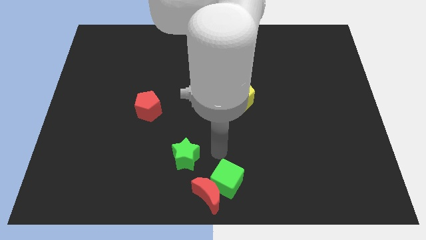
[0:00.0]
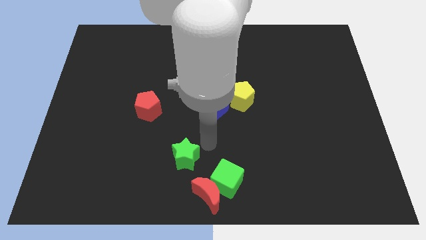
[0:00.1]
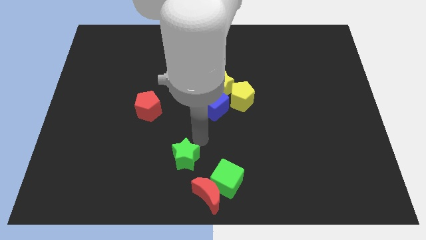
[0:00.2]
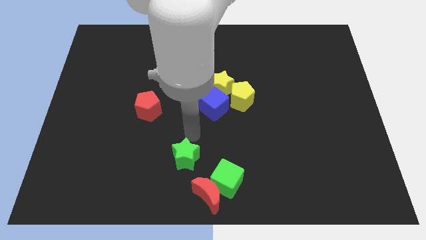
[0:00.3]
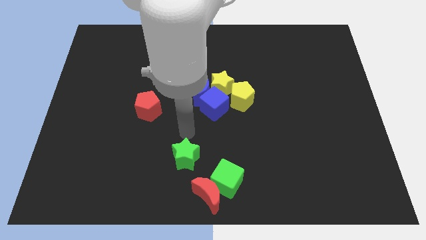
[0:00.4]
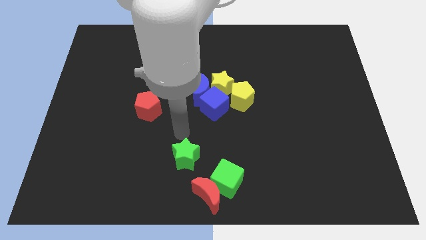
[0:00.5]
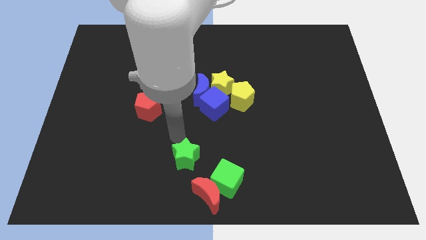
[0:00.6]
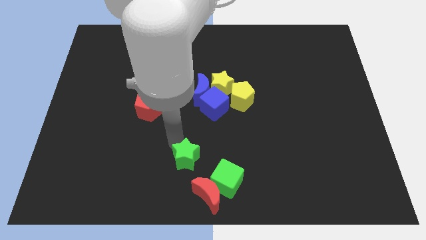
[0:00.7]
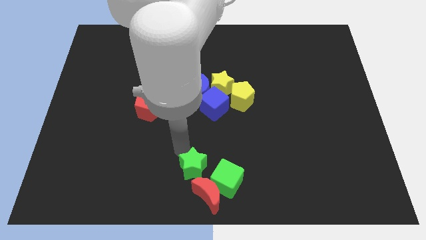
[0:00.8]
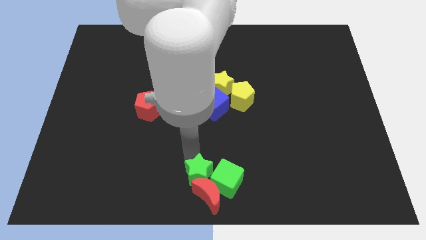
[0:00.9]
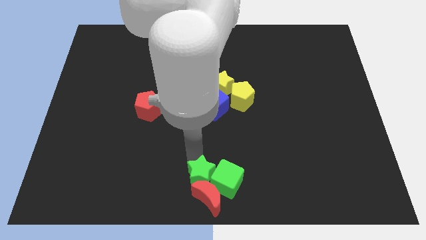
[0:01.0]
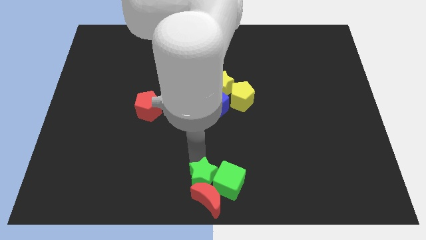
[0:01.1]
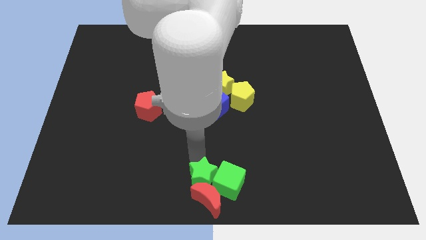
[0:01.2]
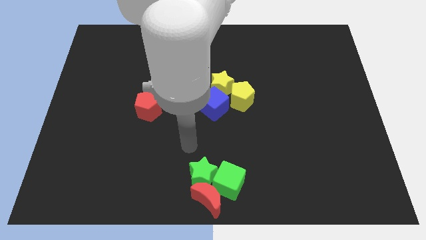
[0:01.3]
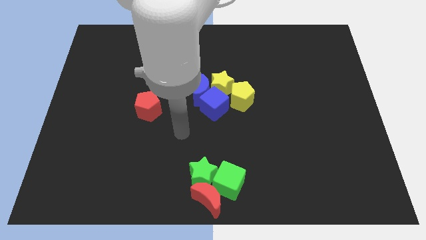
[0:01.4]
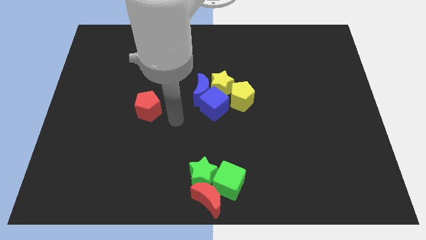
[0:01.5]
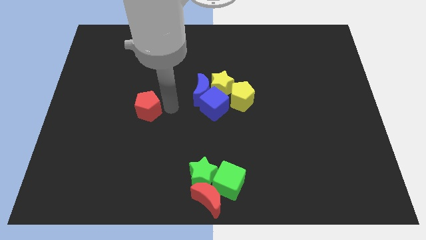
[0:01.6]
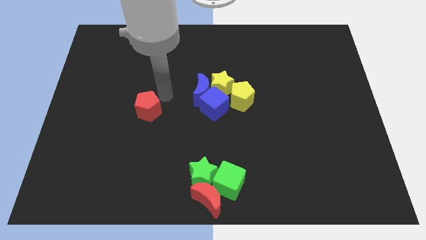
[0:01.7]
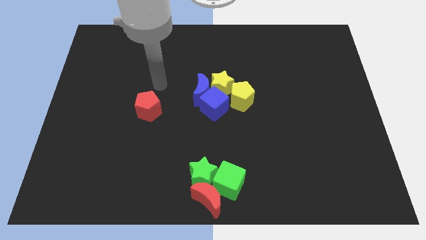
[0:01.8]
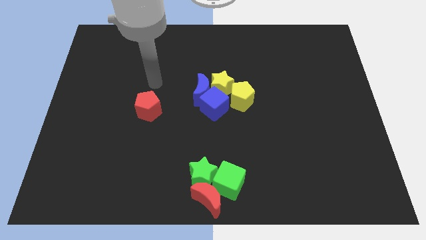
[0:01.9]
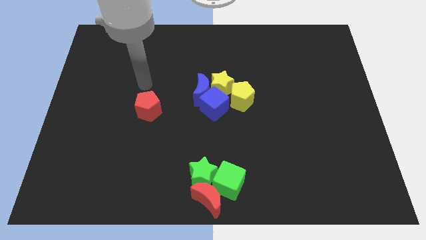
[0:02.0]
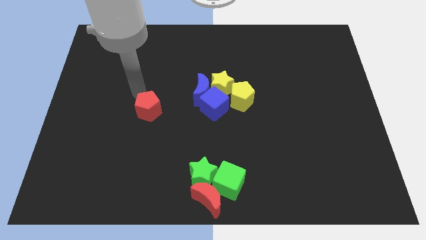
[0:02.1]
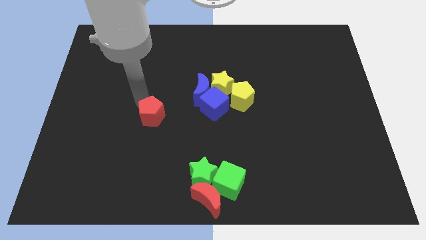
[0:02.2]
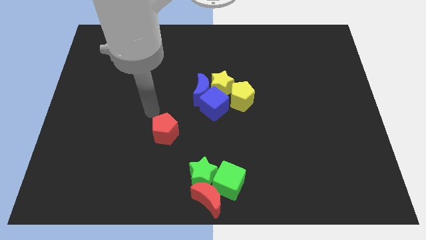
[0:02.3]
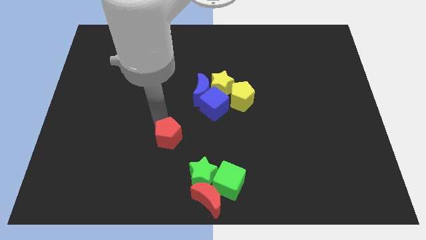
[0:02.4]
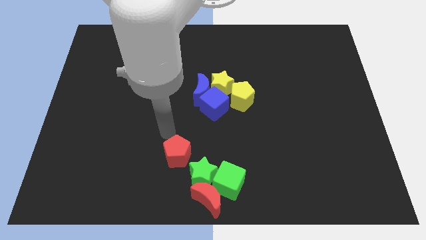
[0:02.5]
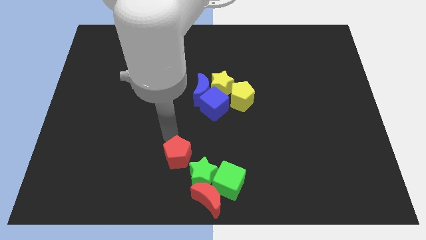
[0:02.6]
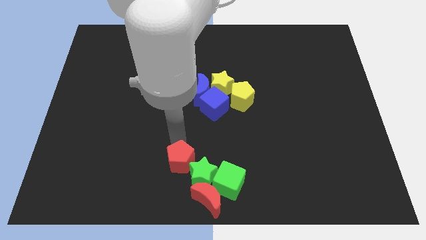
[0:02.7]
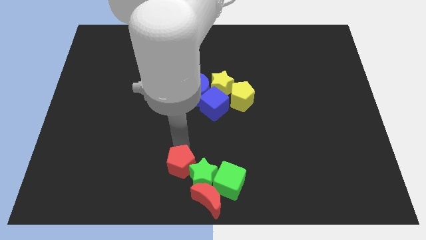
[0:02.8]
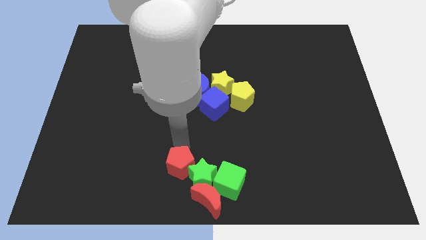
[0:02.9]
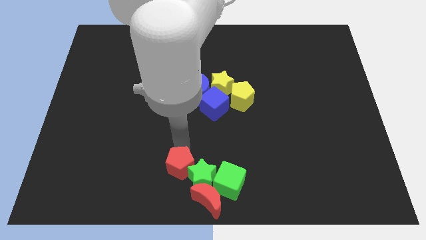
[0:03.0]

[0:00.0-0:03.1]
move the red pentagon into the green cube and red crescent along with the green star

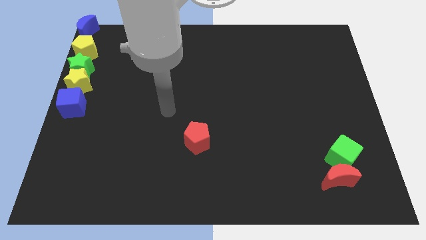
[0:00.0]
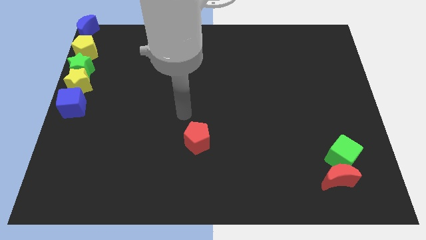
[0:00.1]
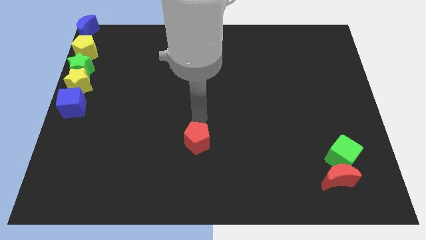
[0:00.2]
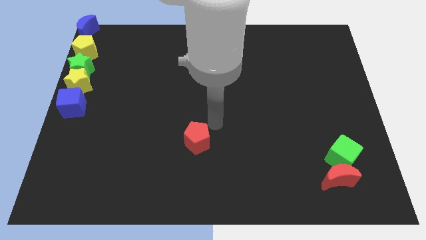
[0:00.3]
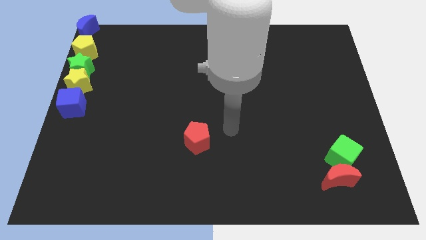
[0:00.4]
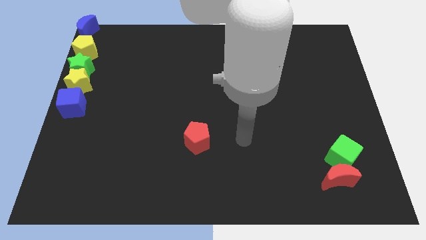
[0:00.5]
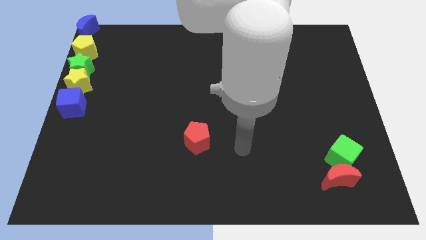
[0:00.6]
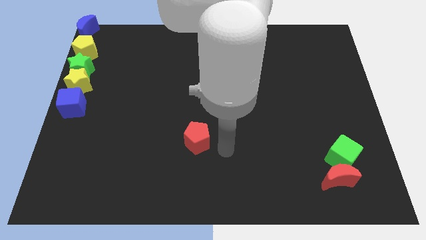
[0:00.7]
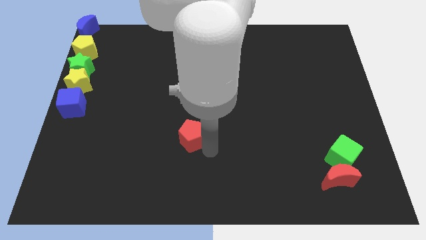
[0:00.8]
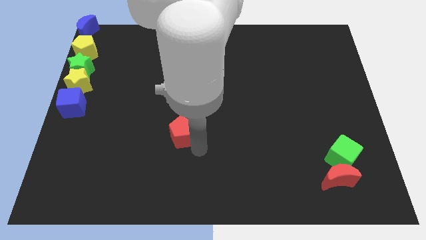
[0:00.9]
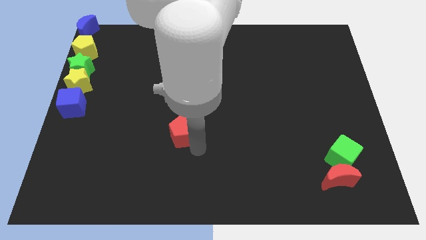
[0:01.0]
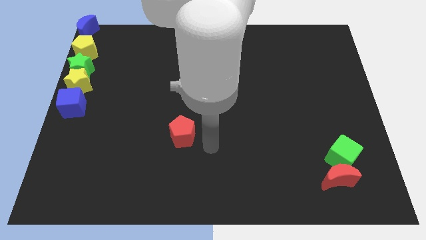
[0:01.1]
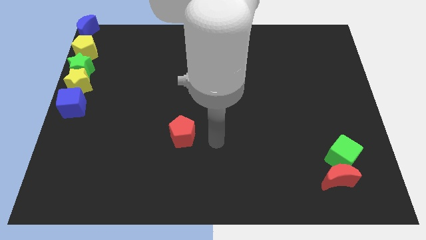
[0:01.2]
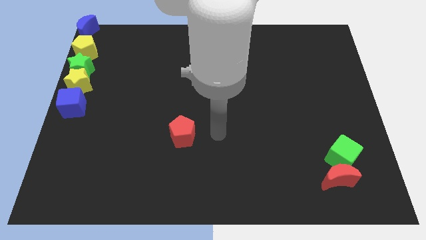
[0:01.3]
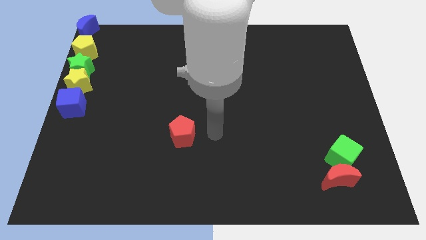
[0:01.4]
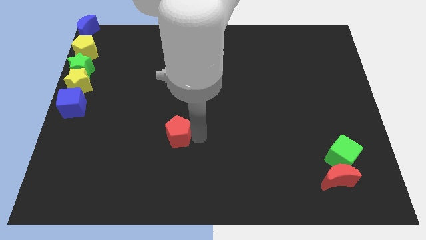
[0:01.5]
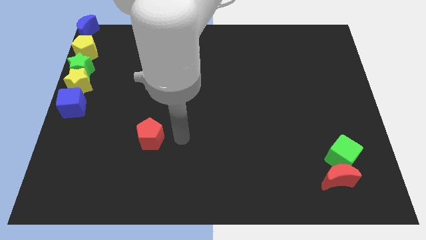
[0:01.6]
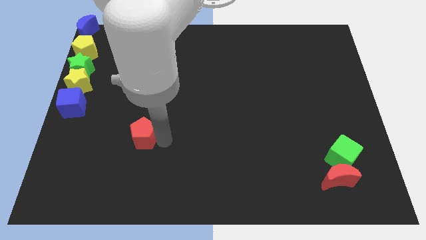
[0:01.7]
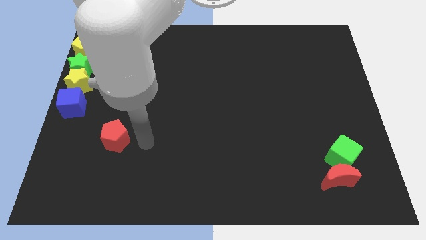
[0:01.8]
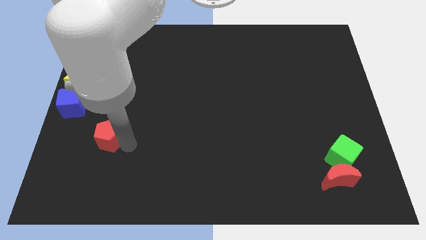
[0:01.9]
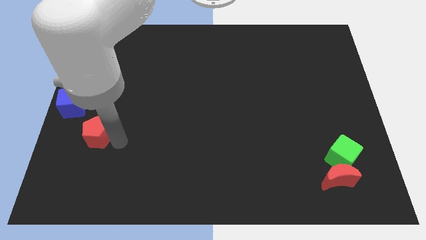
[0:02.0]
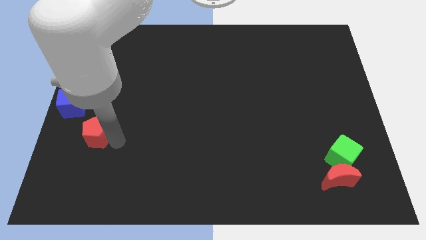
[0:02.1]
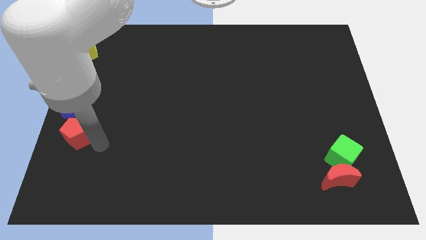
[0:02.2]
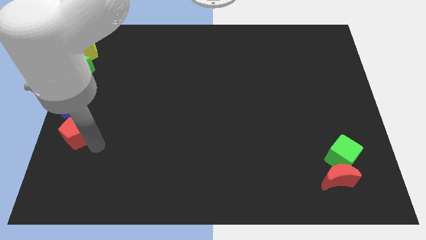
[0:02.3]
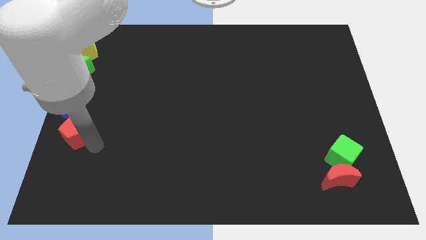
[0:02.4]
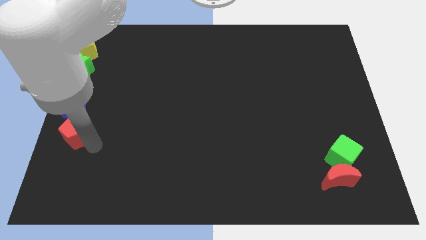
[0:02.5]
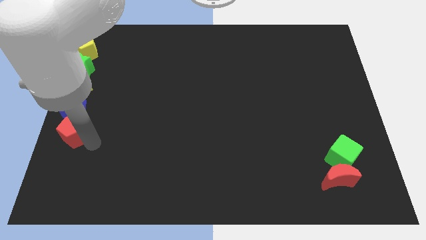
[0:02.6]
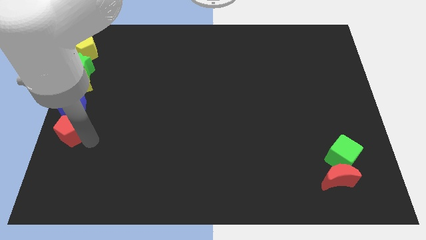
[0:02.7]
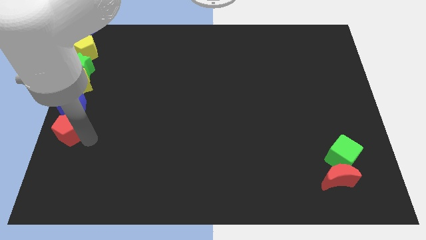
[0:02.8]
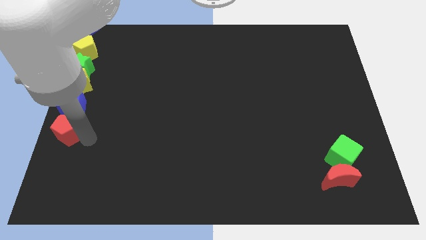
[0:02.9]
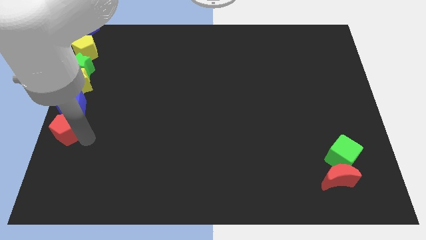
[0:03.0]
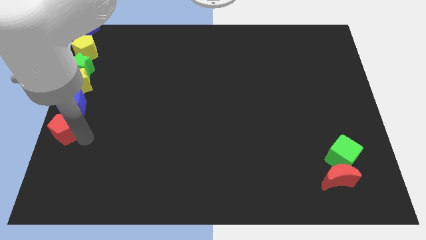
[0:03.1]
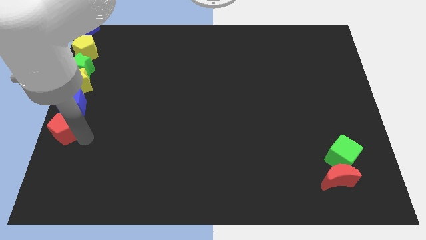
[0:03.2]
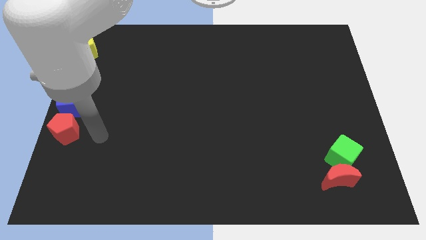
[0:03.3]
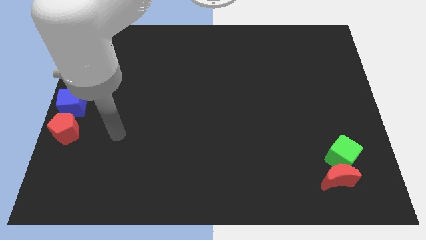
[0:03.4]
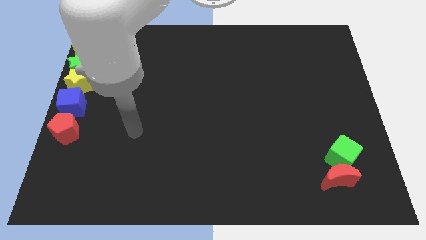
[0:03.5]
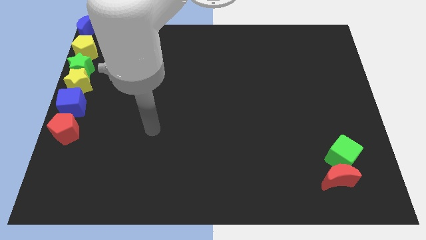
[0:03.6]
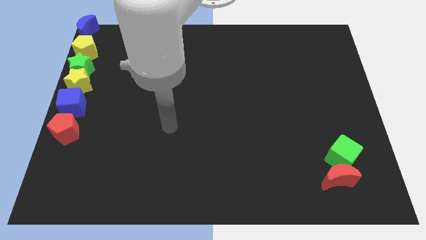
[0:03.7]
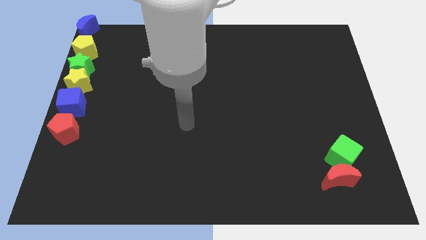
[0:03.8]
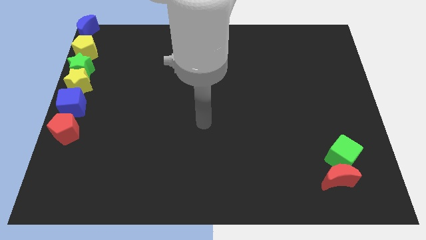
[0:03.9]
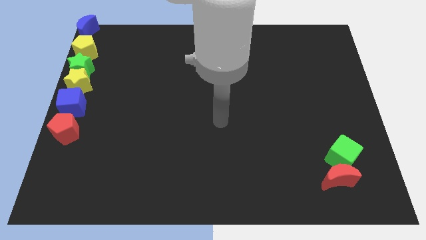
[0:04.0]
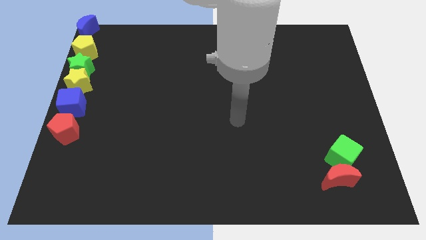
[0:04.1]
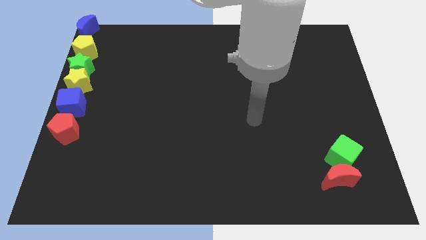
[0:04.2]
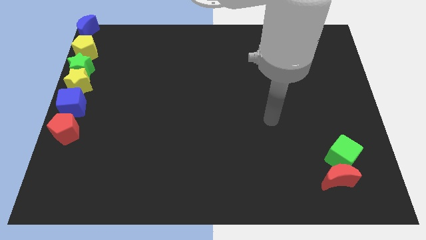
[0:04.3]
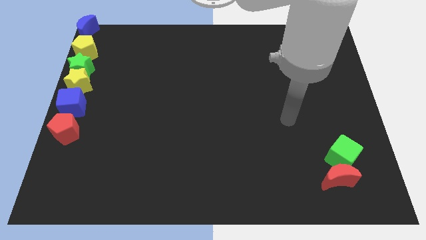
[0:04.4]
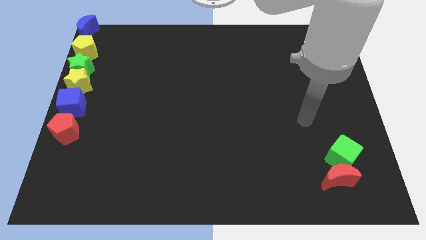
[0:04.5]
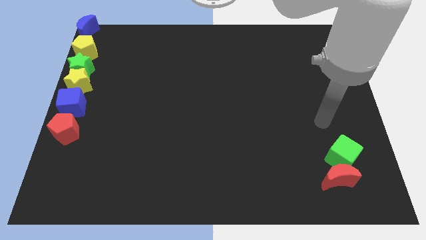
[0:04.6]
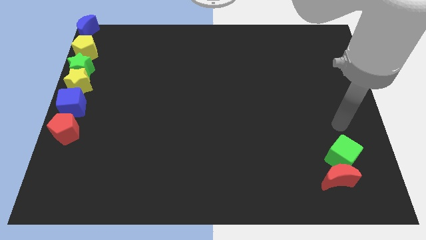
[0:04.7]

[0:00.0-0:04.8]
push the red pentagon to the bottom of the blue cube

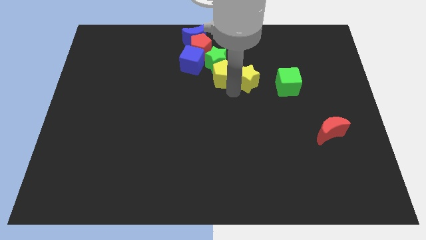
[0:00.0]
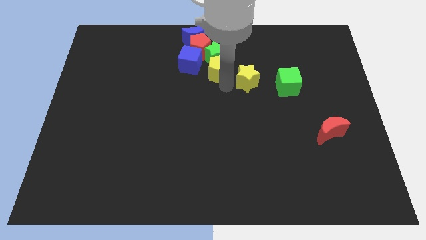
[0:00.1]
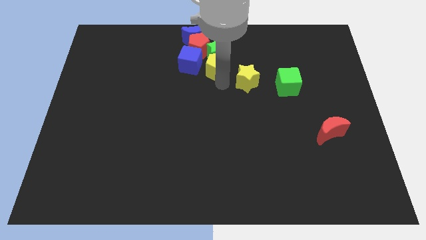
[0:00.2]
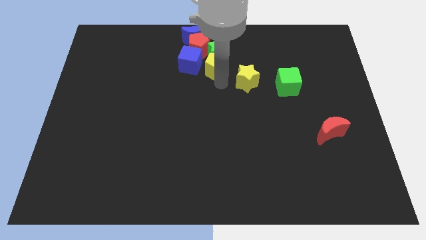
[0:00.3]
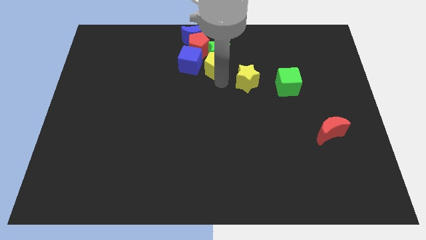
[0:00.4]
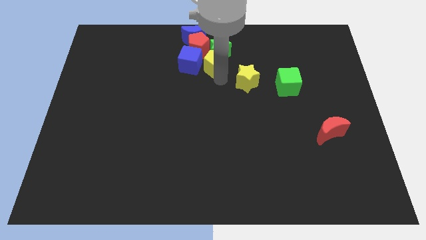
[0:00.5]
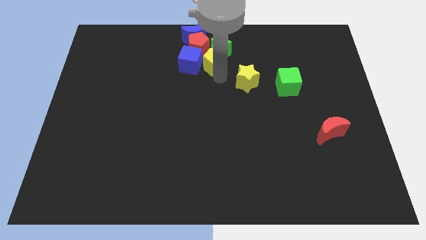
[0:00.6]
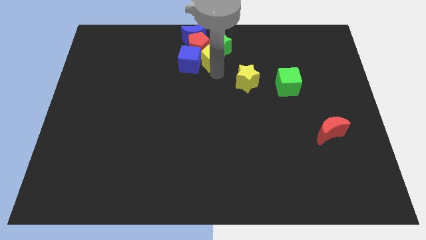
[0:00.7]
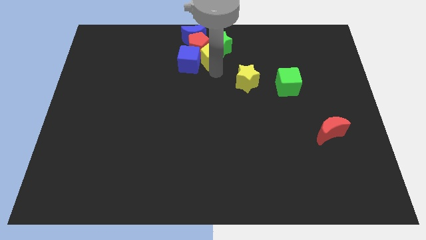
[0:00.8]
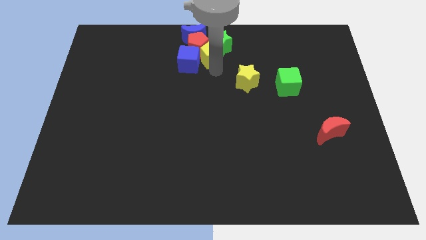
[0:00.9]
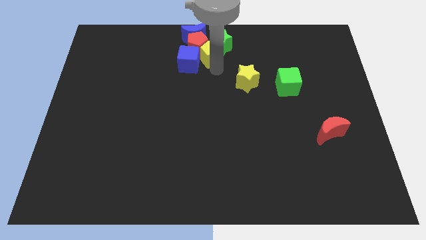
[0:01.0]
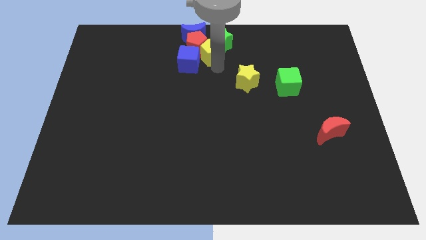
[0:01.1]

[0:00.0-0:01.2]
move the yellow pentagon close to the bottom right of the red pentagon
